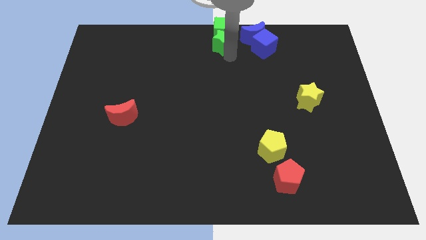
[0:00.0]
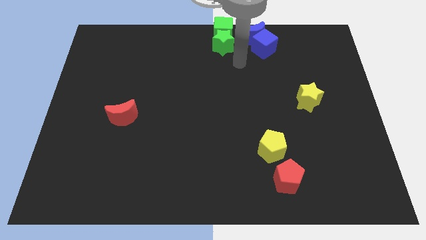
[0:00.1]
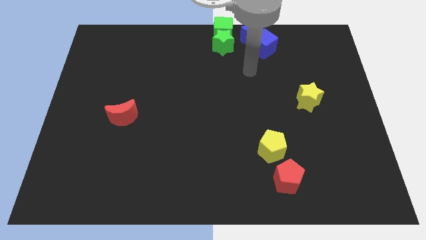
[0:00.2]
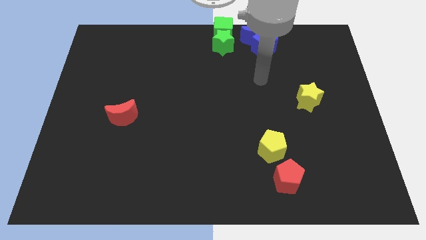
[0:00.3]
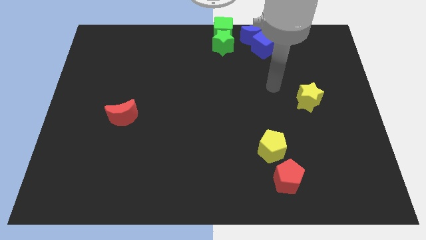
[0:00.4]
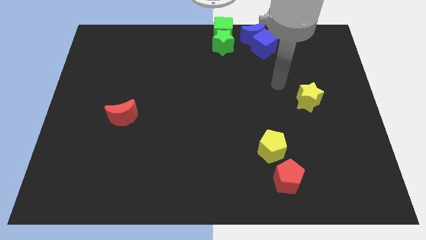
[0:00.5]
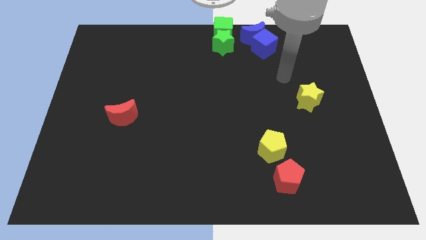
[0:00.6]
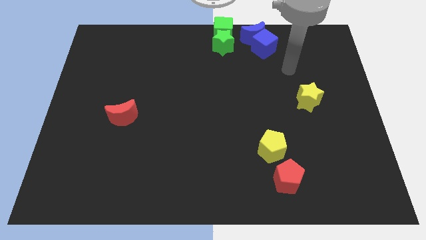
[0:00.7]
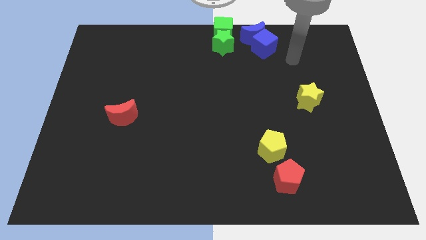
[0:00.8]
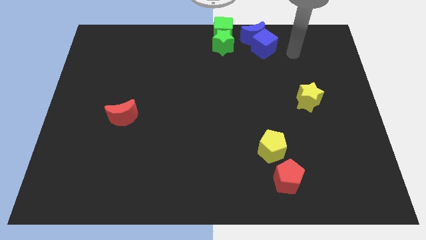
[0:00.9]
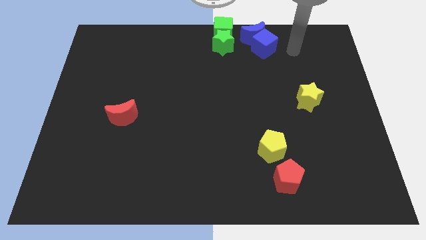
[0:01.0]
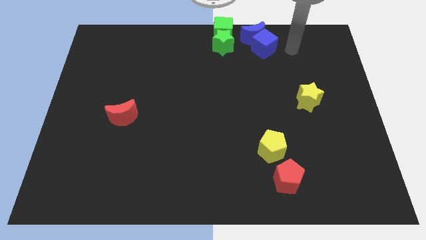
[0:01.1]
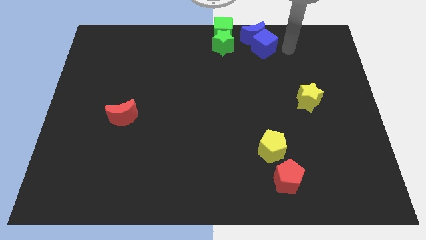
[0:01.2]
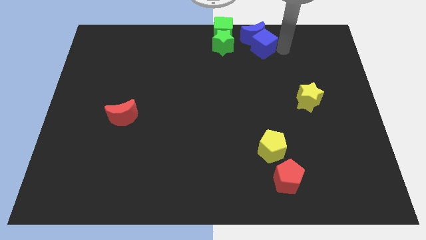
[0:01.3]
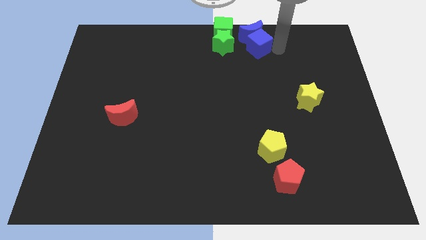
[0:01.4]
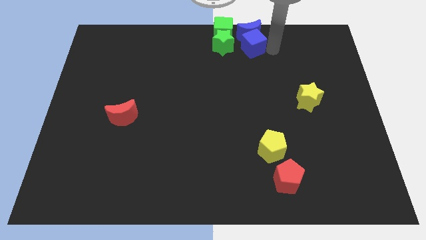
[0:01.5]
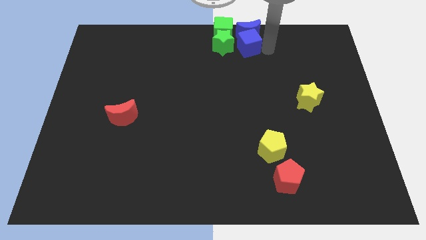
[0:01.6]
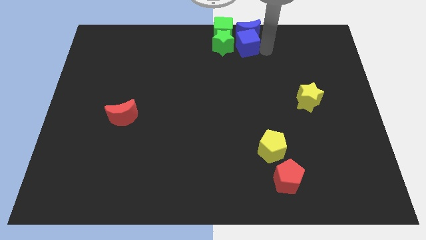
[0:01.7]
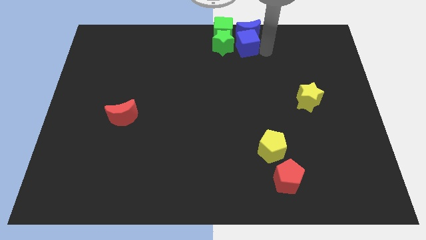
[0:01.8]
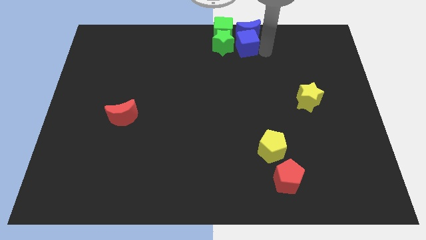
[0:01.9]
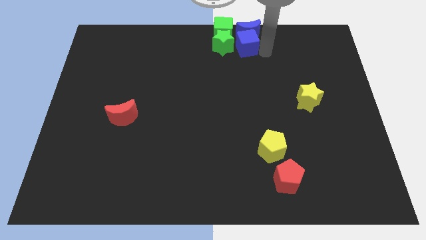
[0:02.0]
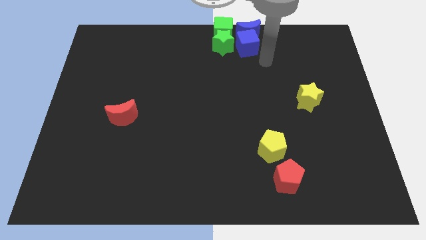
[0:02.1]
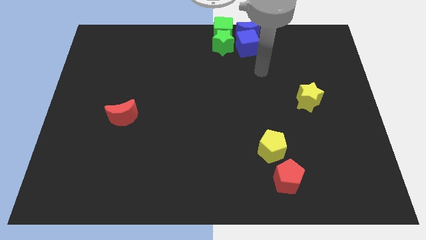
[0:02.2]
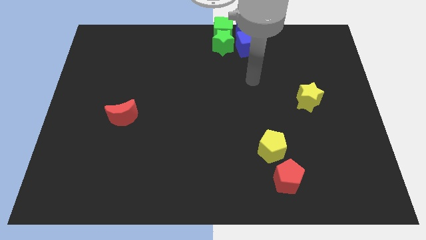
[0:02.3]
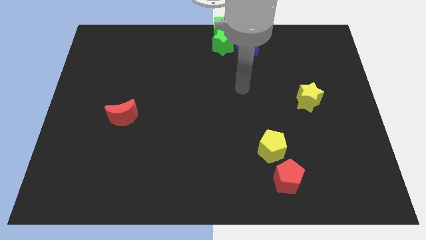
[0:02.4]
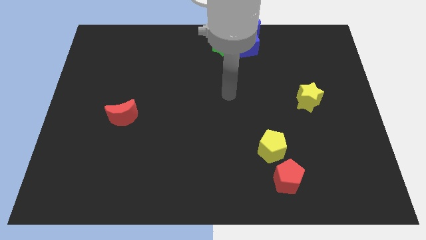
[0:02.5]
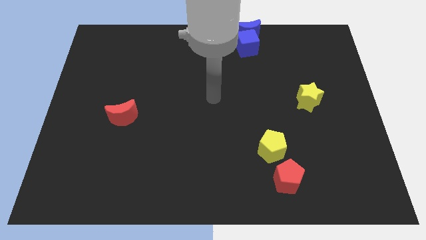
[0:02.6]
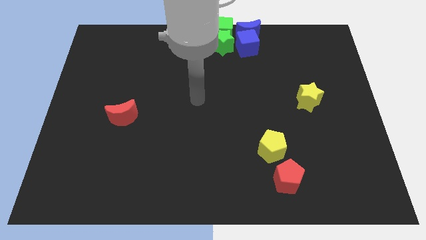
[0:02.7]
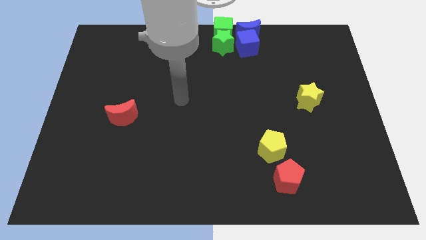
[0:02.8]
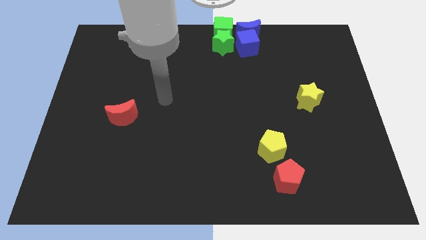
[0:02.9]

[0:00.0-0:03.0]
slightly push the group of blue blocks to the left side

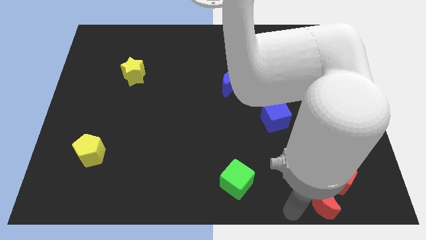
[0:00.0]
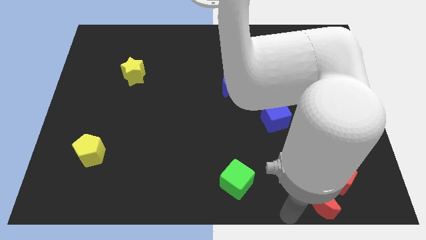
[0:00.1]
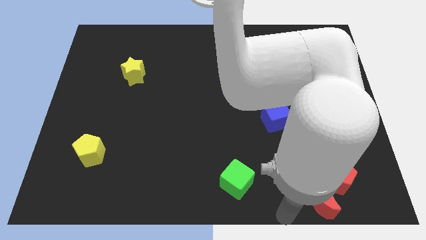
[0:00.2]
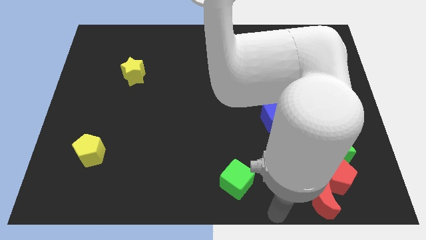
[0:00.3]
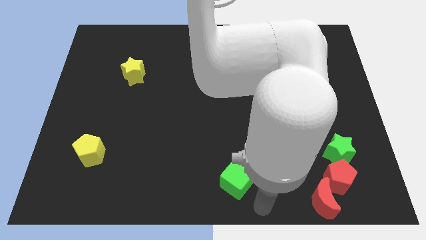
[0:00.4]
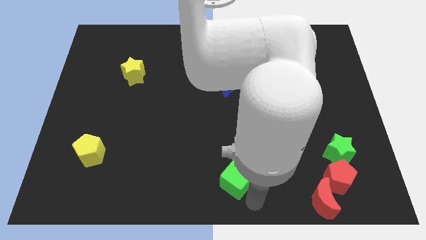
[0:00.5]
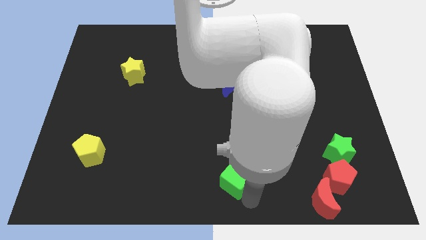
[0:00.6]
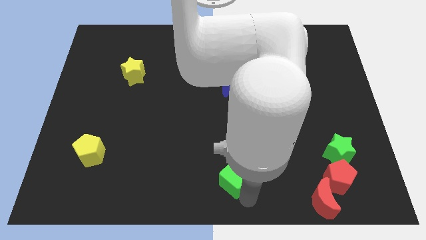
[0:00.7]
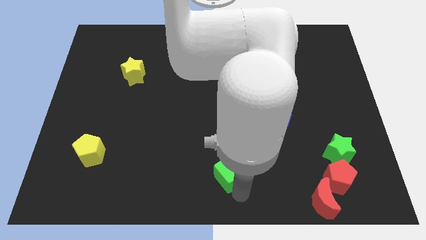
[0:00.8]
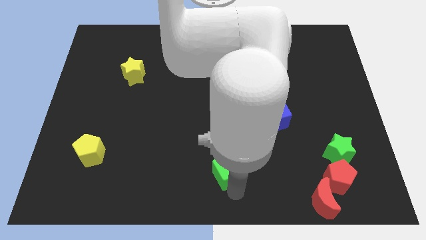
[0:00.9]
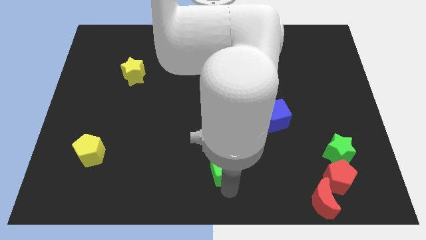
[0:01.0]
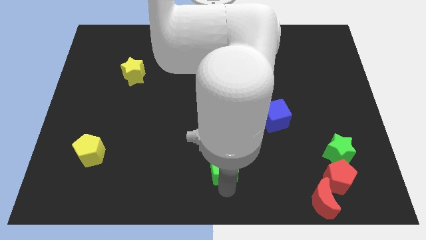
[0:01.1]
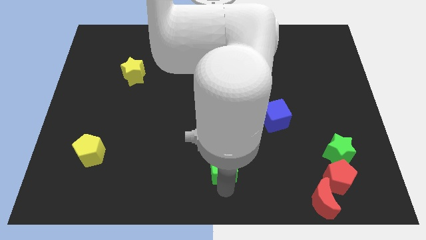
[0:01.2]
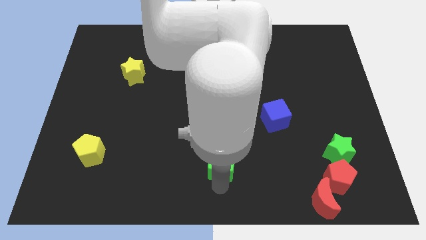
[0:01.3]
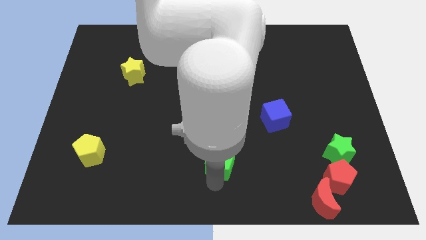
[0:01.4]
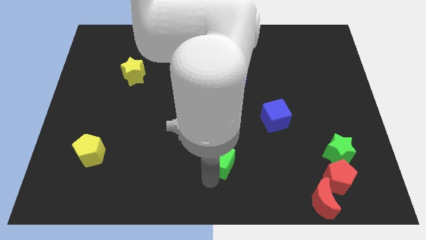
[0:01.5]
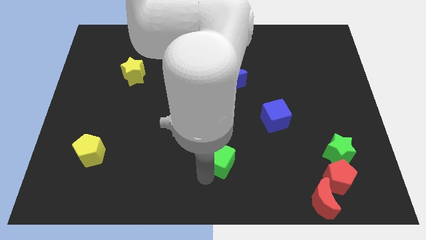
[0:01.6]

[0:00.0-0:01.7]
move the green cube slightly upwards

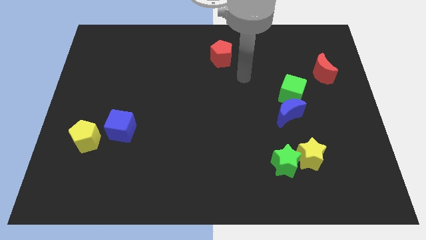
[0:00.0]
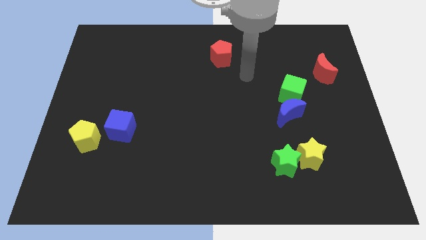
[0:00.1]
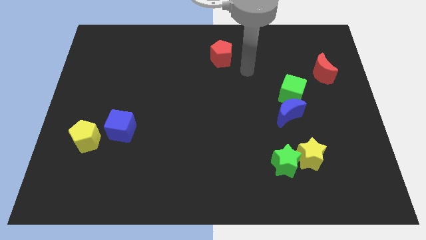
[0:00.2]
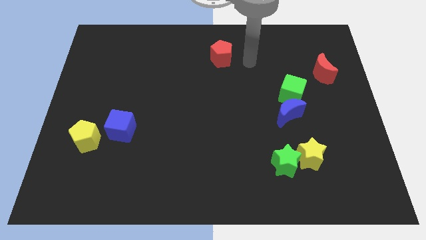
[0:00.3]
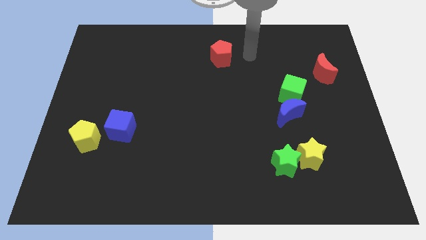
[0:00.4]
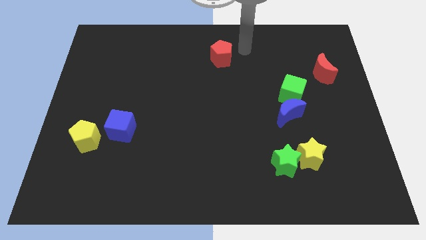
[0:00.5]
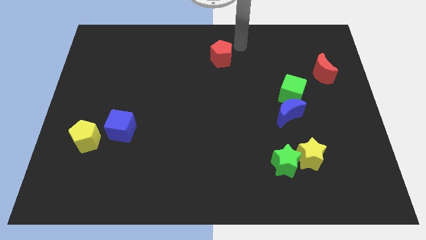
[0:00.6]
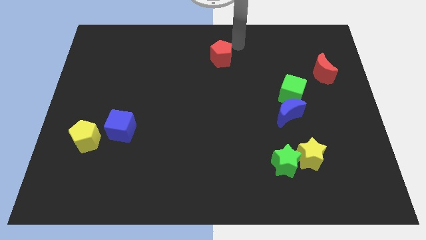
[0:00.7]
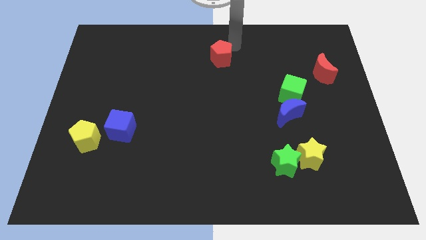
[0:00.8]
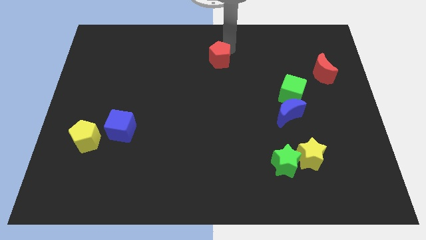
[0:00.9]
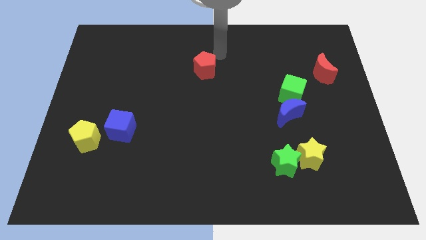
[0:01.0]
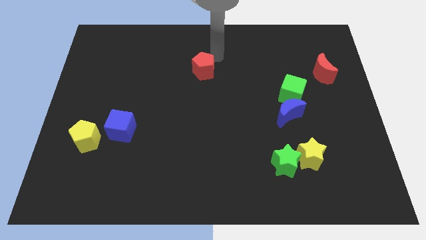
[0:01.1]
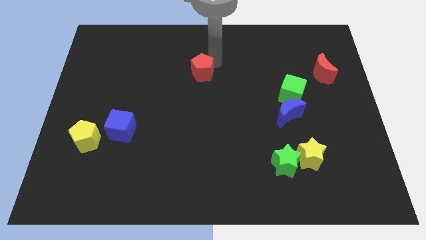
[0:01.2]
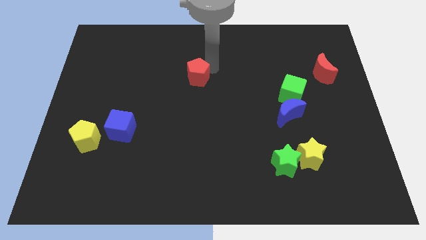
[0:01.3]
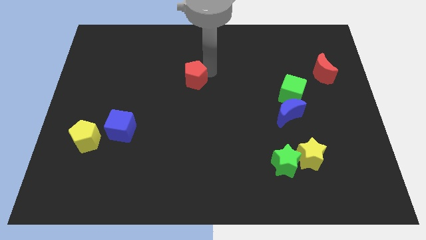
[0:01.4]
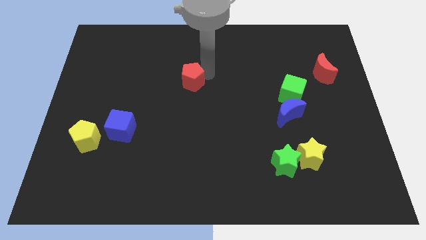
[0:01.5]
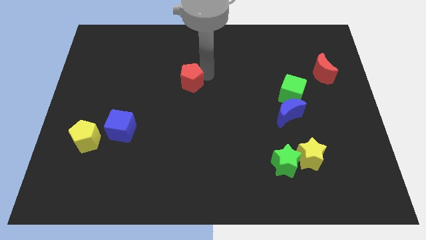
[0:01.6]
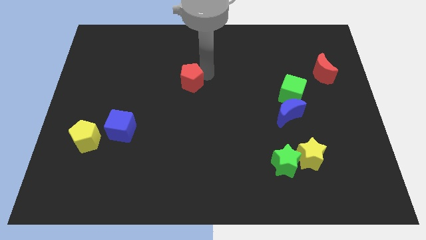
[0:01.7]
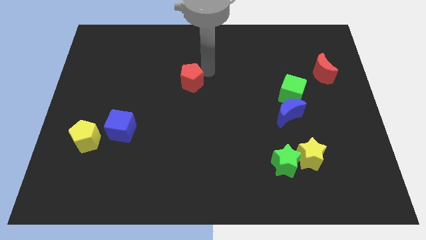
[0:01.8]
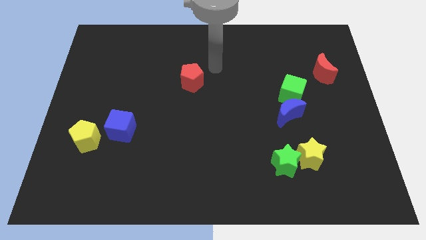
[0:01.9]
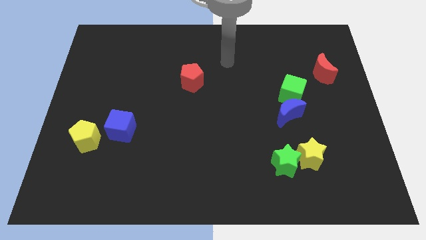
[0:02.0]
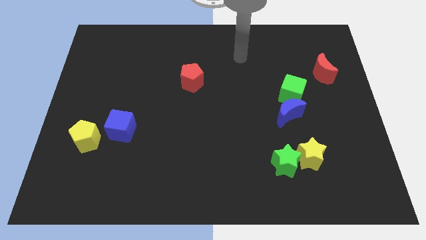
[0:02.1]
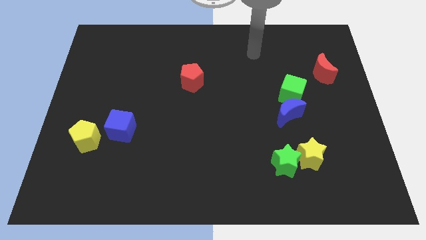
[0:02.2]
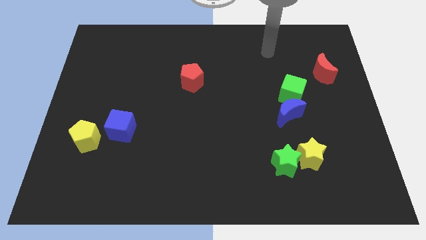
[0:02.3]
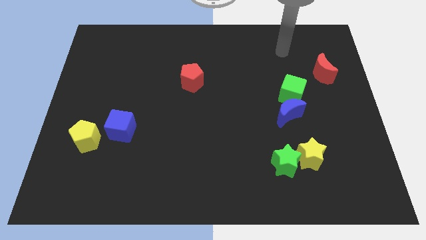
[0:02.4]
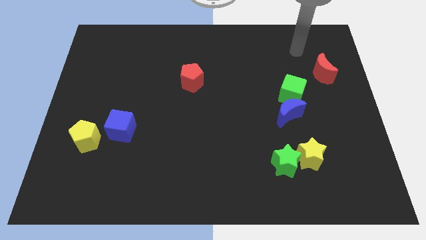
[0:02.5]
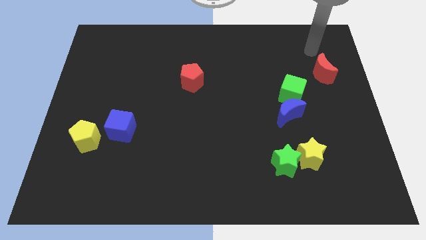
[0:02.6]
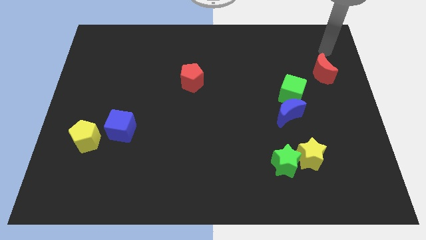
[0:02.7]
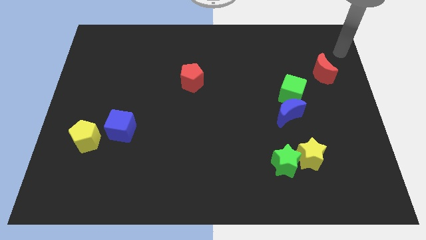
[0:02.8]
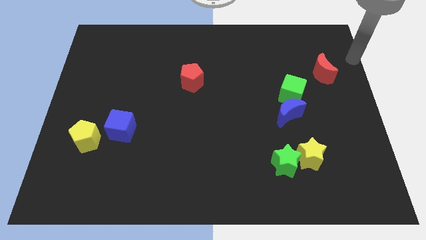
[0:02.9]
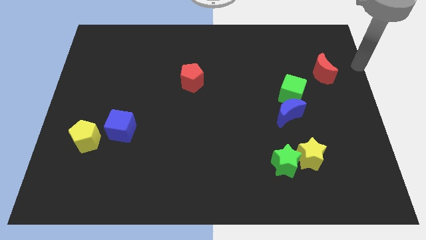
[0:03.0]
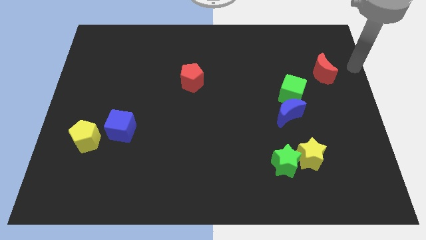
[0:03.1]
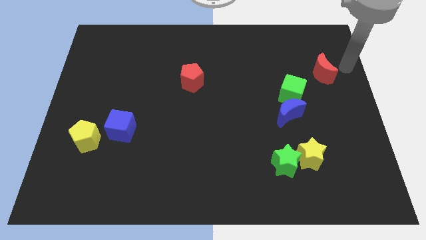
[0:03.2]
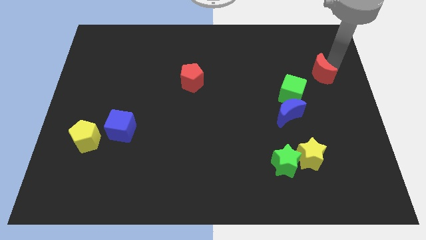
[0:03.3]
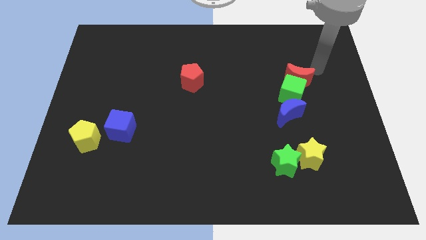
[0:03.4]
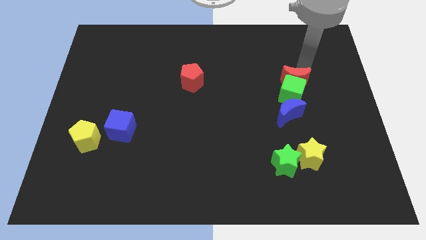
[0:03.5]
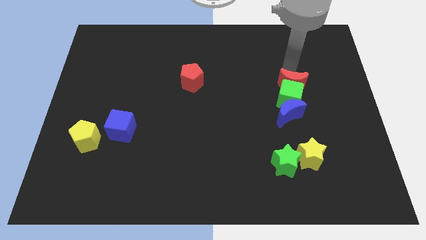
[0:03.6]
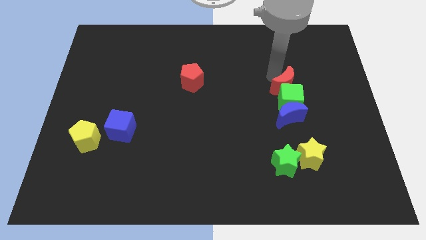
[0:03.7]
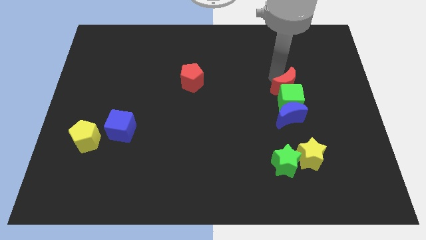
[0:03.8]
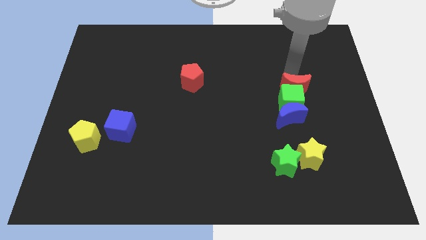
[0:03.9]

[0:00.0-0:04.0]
place red pentagon towards the center of the board

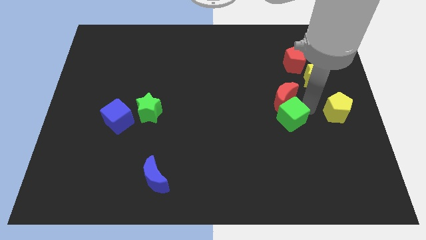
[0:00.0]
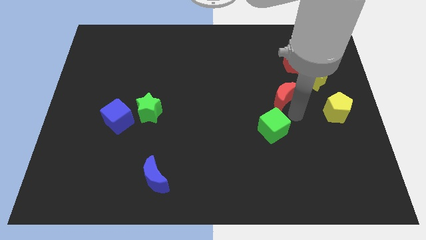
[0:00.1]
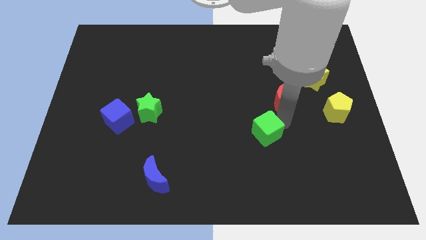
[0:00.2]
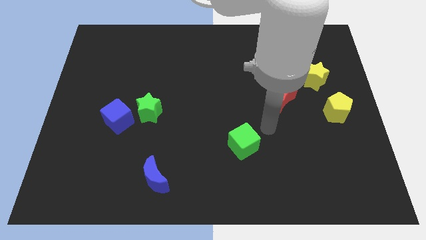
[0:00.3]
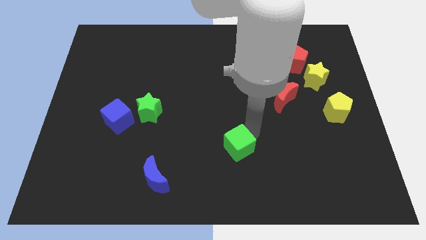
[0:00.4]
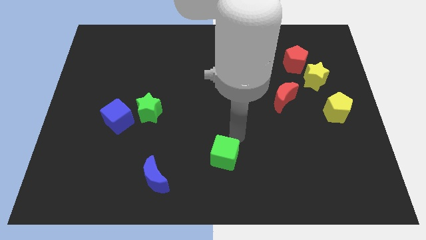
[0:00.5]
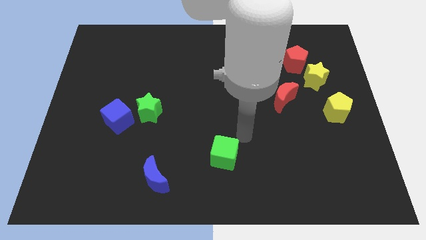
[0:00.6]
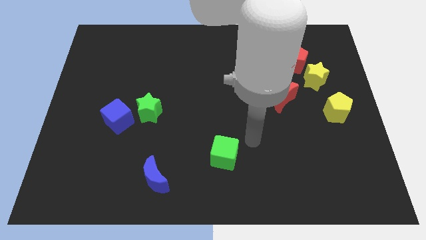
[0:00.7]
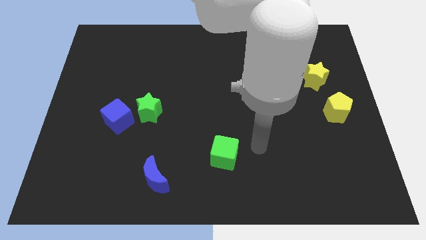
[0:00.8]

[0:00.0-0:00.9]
move the green cube to the left of the board
